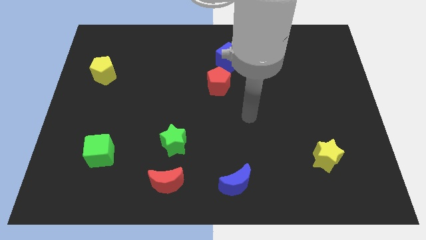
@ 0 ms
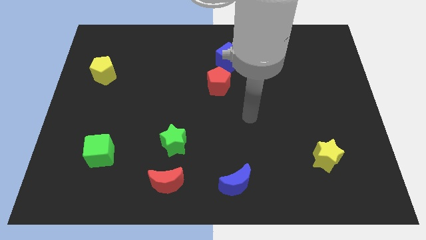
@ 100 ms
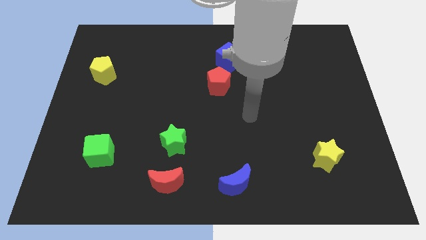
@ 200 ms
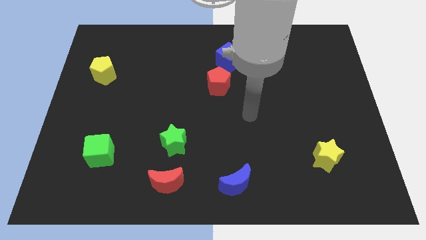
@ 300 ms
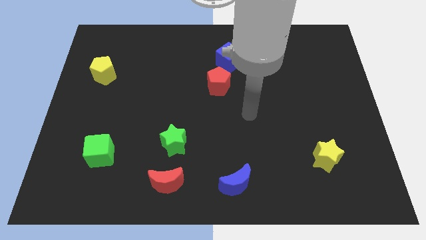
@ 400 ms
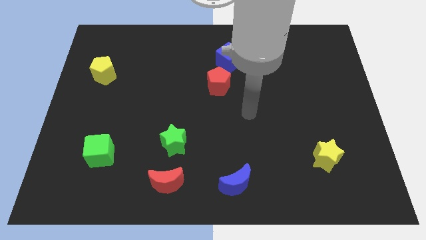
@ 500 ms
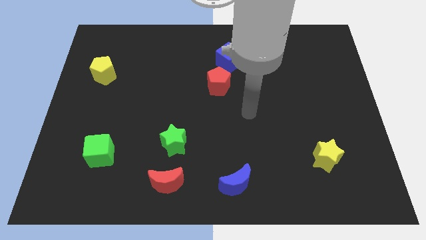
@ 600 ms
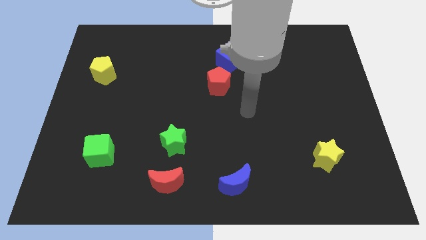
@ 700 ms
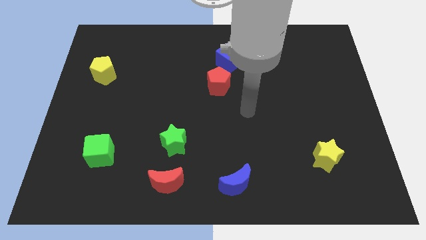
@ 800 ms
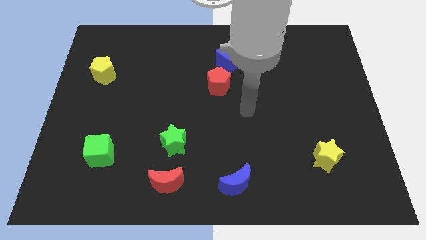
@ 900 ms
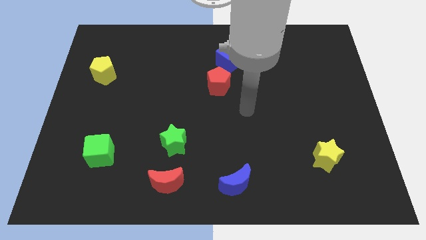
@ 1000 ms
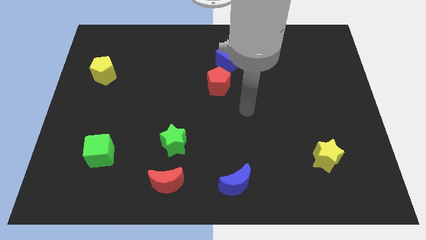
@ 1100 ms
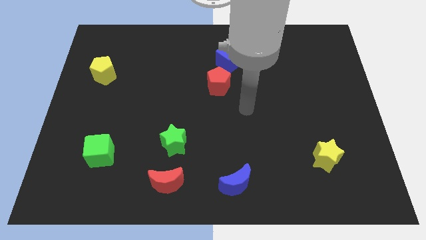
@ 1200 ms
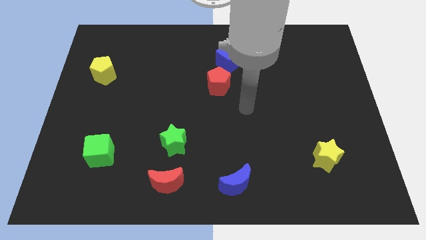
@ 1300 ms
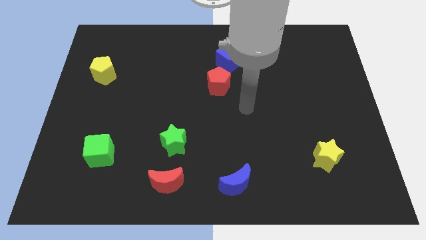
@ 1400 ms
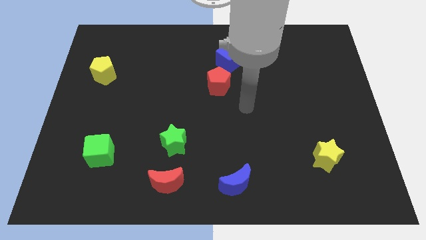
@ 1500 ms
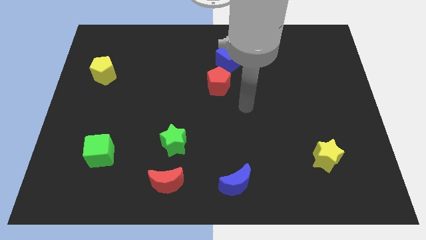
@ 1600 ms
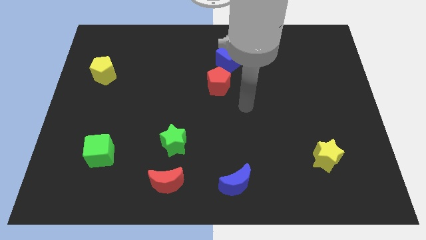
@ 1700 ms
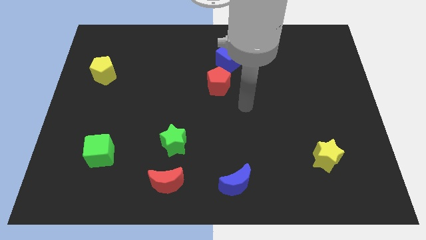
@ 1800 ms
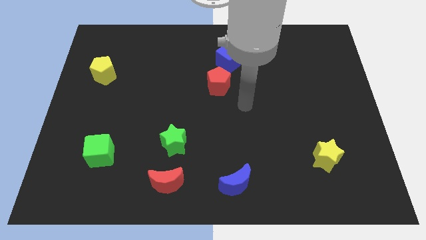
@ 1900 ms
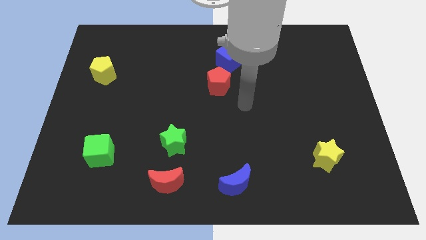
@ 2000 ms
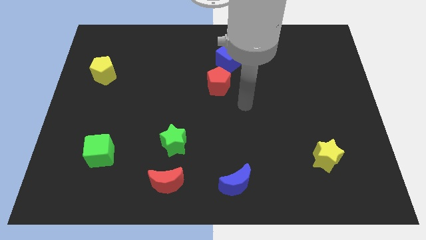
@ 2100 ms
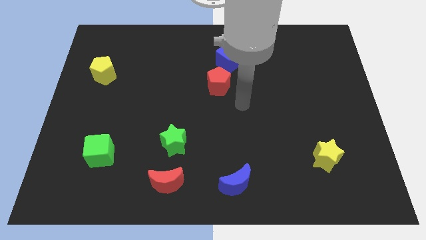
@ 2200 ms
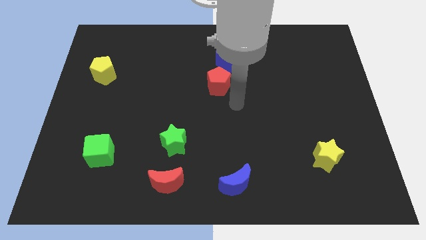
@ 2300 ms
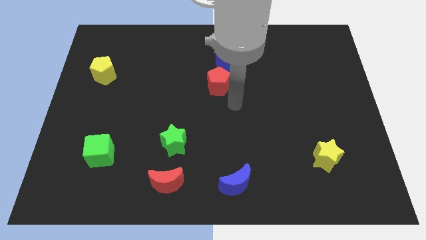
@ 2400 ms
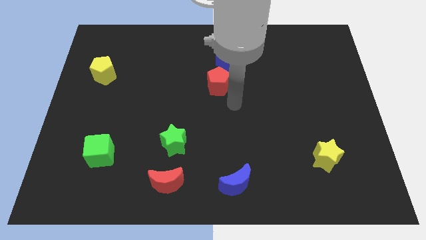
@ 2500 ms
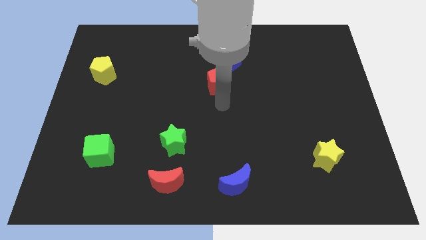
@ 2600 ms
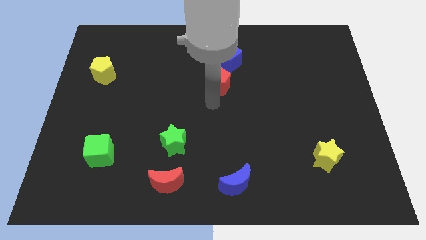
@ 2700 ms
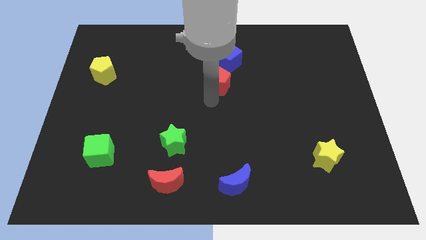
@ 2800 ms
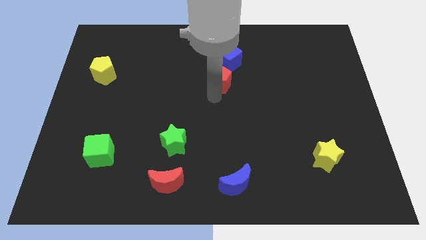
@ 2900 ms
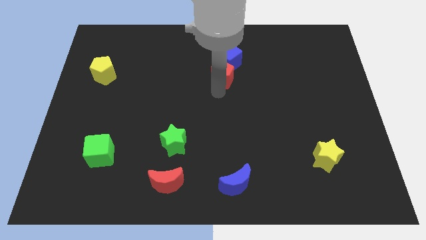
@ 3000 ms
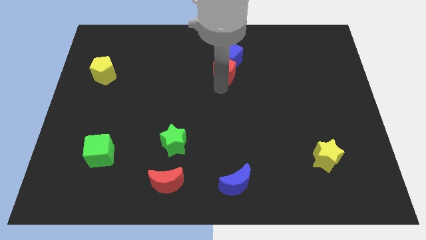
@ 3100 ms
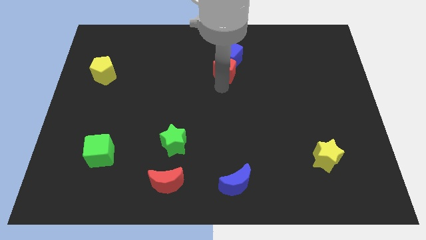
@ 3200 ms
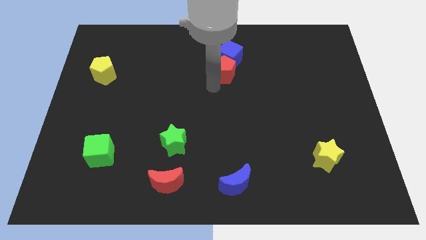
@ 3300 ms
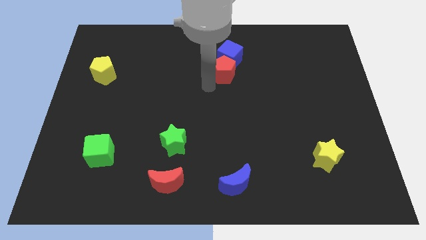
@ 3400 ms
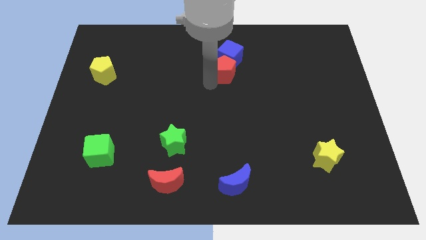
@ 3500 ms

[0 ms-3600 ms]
push the red pentagon into the blue cube

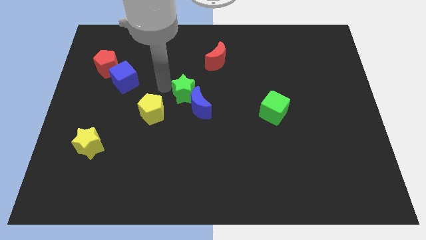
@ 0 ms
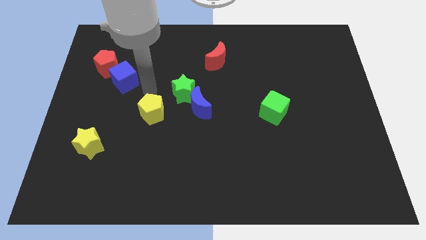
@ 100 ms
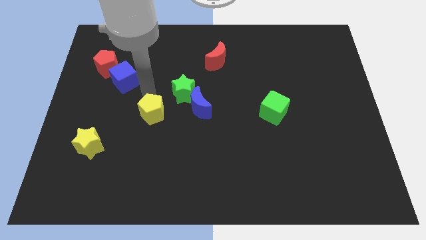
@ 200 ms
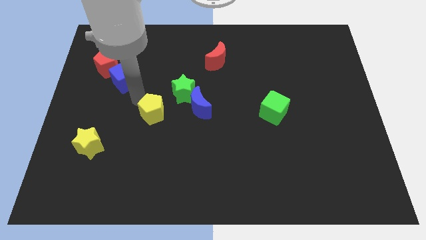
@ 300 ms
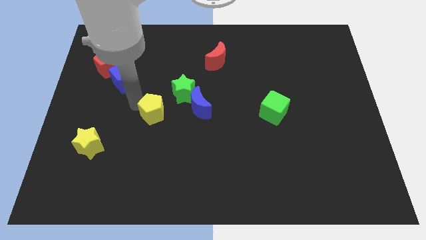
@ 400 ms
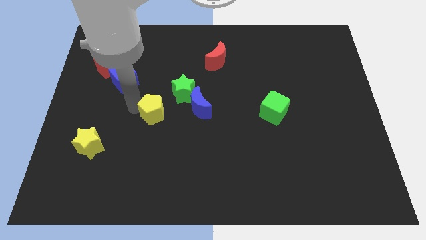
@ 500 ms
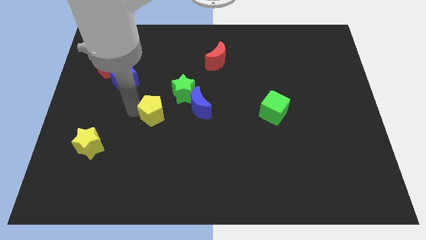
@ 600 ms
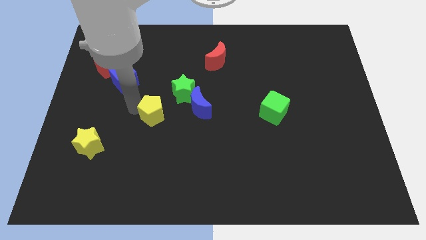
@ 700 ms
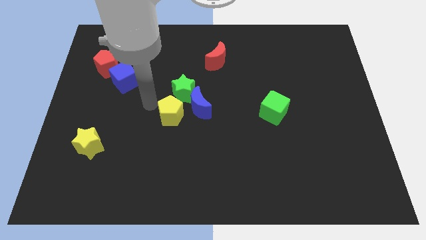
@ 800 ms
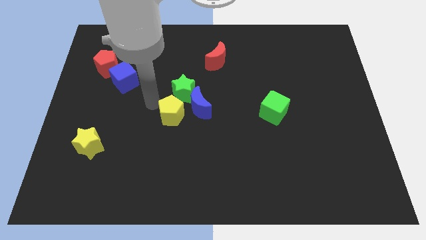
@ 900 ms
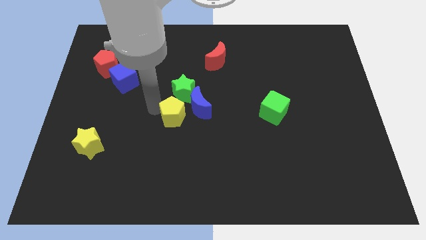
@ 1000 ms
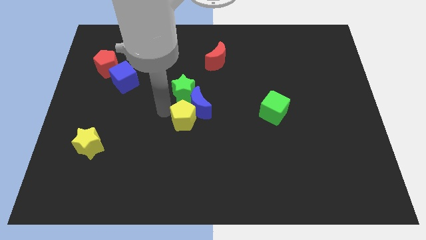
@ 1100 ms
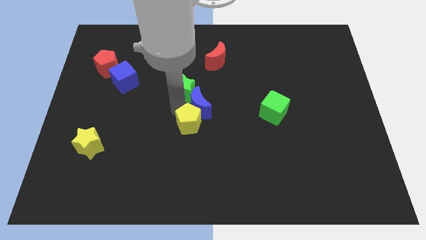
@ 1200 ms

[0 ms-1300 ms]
place the yellow pentagon below the green star

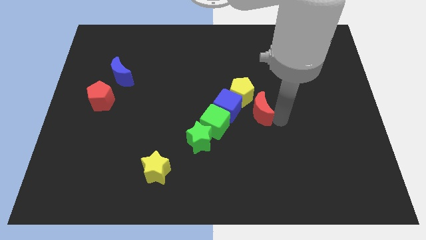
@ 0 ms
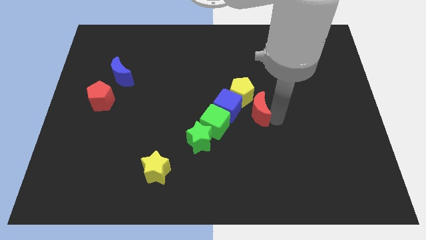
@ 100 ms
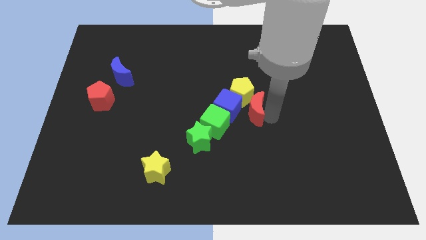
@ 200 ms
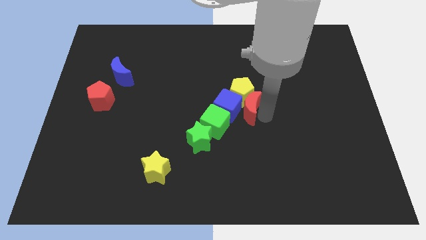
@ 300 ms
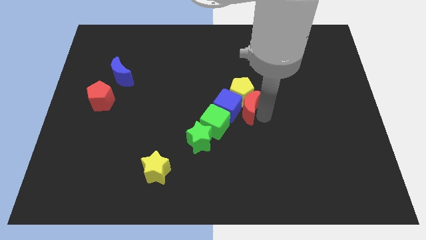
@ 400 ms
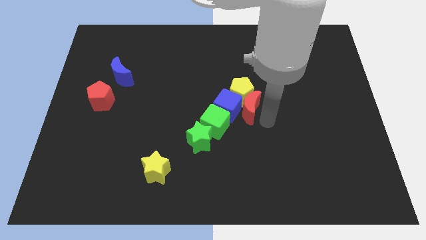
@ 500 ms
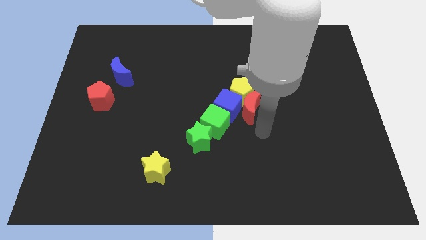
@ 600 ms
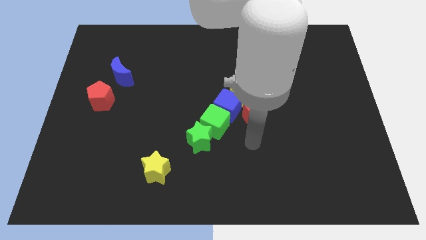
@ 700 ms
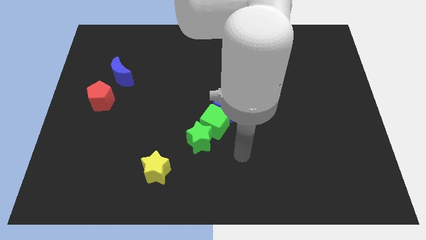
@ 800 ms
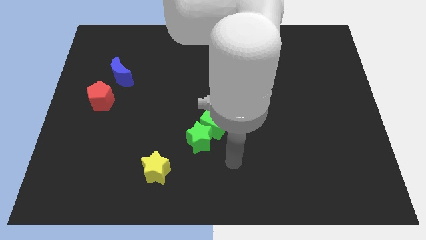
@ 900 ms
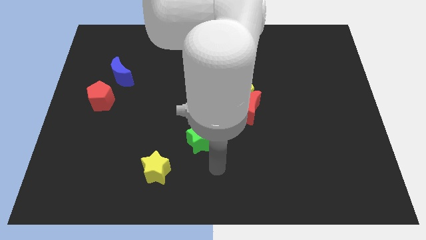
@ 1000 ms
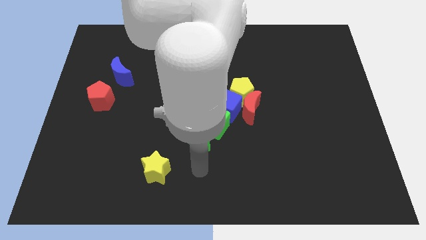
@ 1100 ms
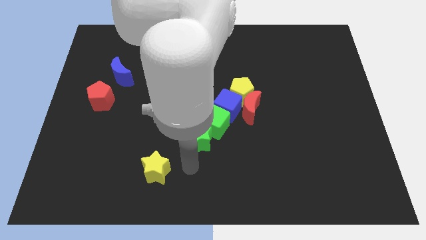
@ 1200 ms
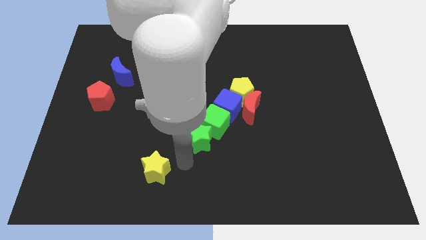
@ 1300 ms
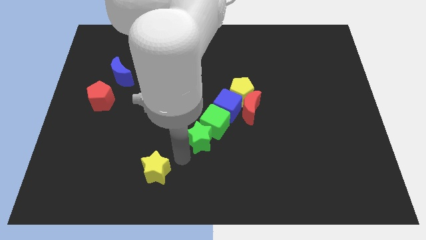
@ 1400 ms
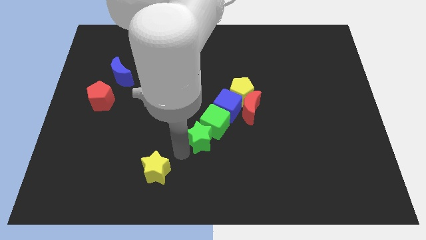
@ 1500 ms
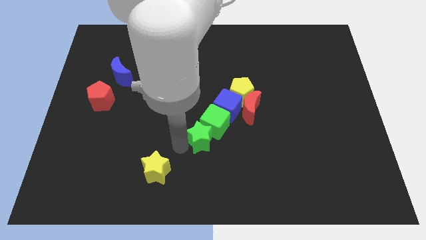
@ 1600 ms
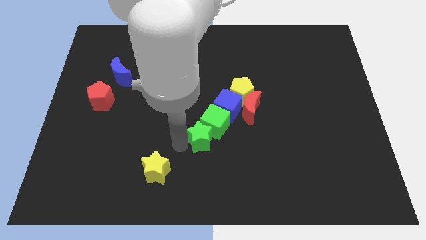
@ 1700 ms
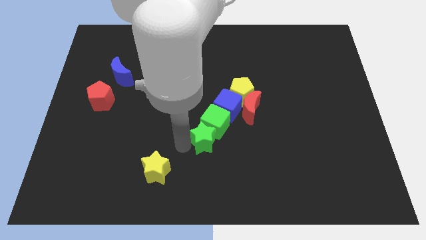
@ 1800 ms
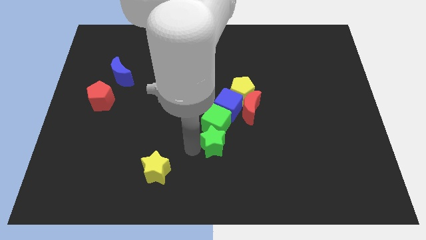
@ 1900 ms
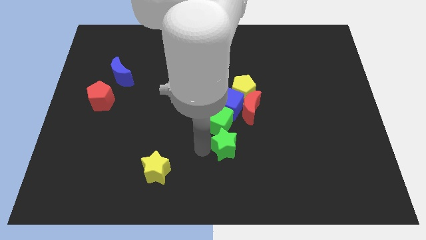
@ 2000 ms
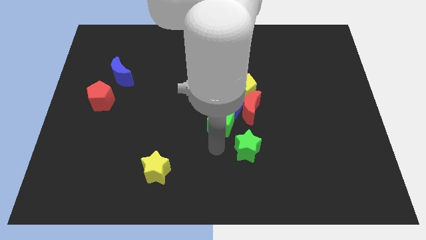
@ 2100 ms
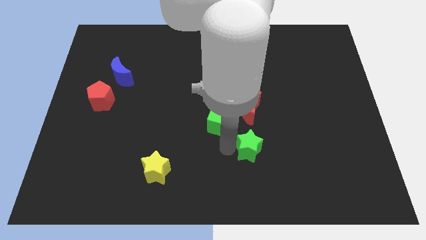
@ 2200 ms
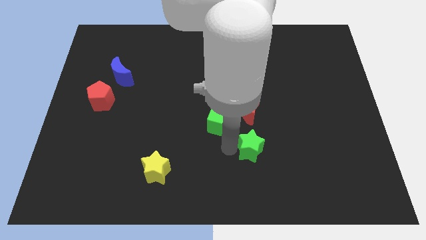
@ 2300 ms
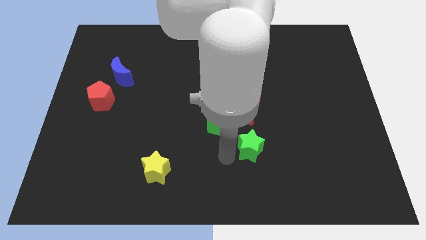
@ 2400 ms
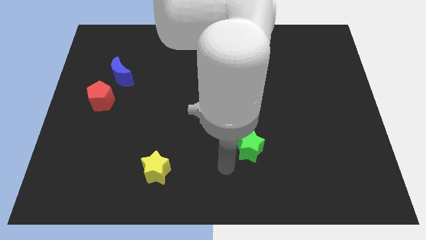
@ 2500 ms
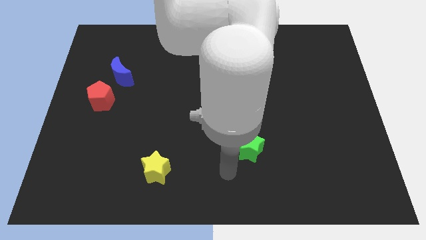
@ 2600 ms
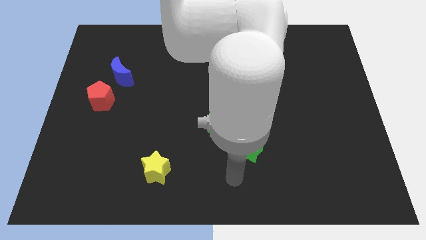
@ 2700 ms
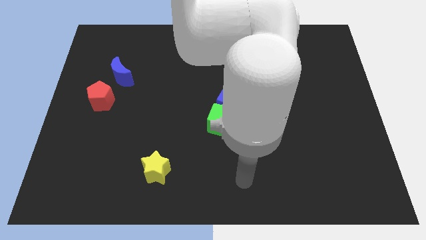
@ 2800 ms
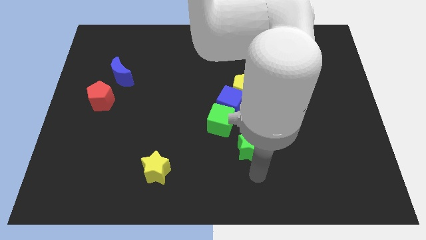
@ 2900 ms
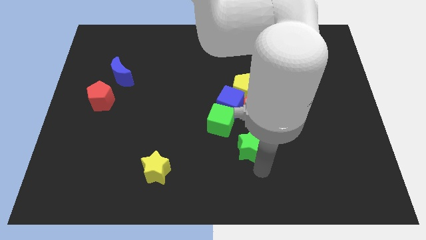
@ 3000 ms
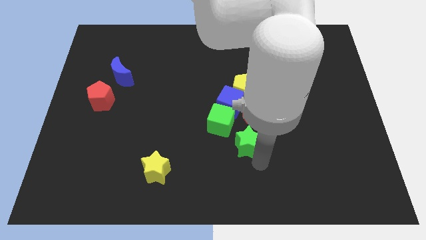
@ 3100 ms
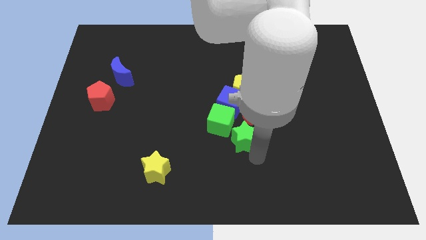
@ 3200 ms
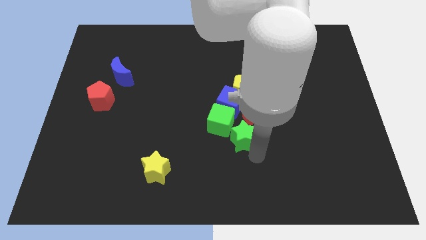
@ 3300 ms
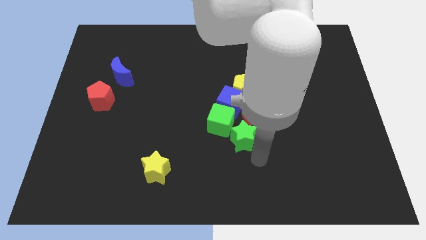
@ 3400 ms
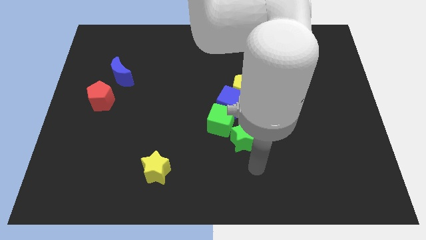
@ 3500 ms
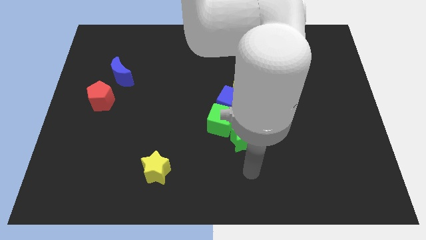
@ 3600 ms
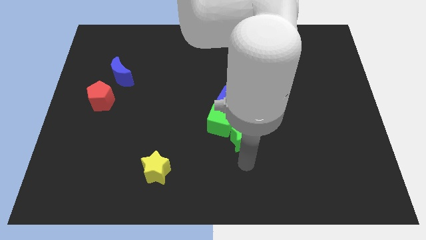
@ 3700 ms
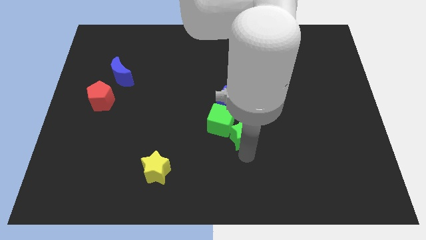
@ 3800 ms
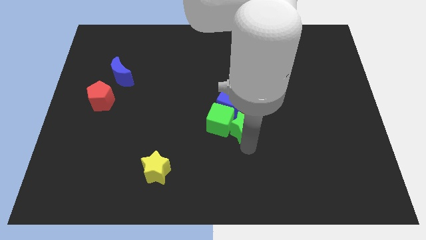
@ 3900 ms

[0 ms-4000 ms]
separate the green star from the vertical line
